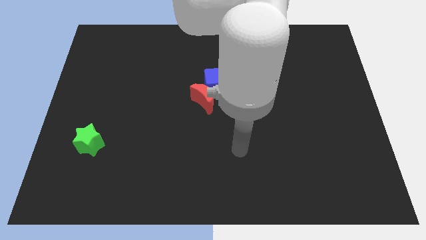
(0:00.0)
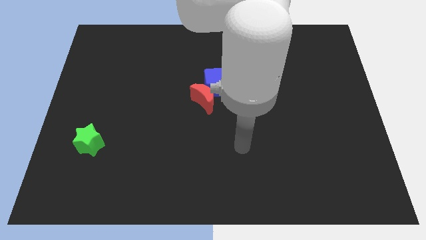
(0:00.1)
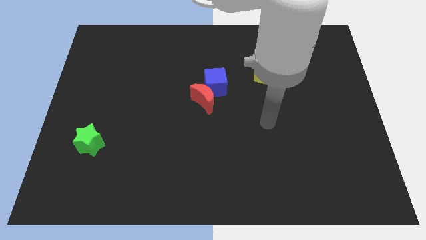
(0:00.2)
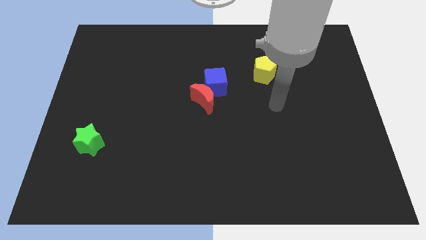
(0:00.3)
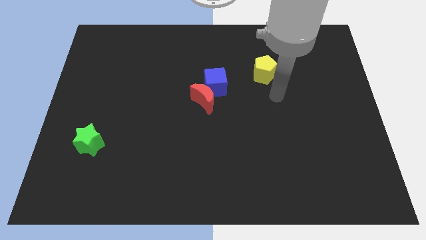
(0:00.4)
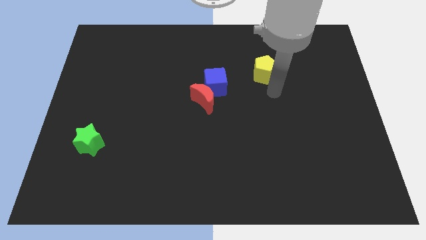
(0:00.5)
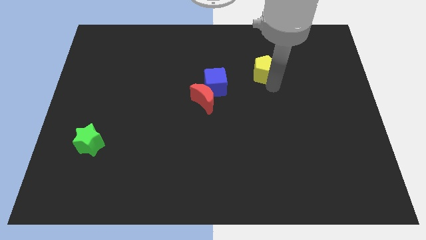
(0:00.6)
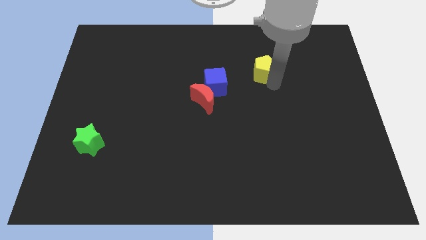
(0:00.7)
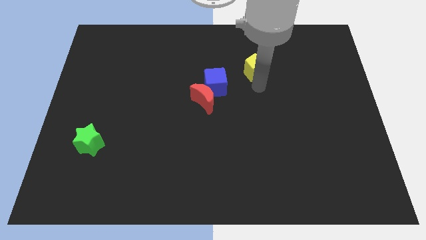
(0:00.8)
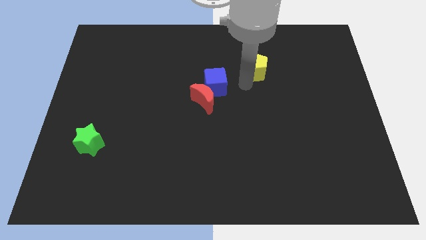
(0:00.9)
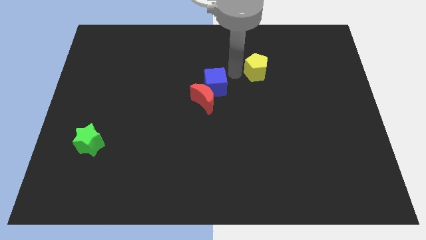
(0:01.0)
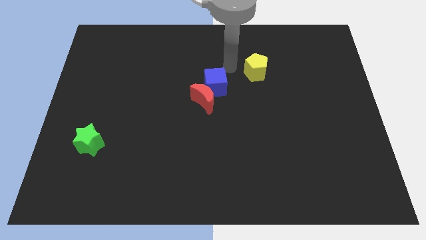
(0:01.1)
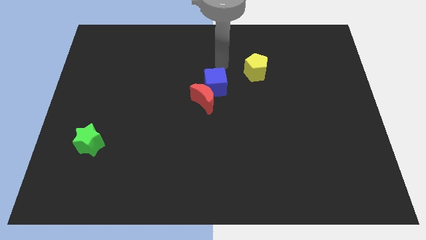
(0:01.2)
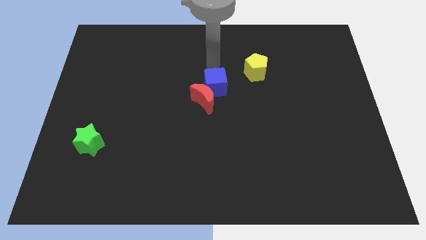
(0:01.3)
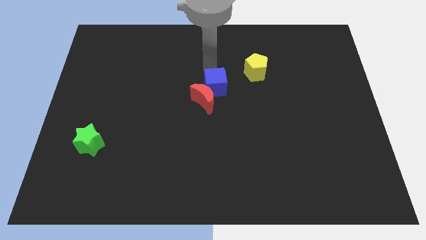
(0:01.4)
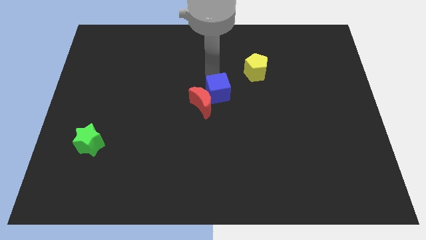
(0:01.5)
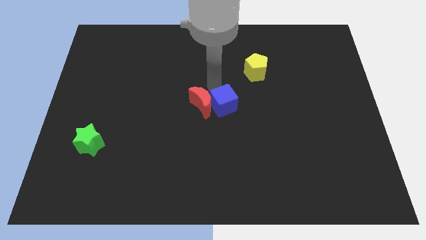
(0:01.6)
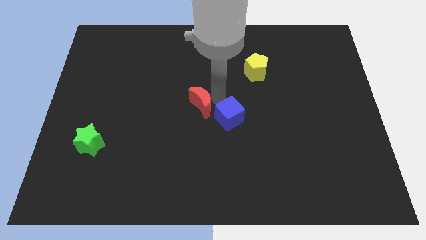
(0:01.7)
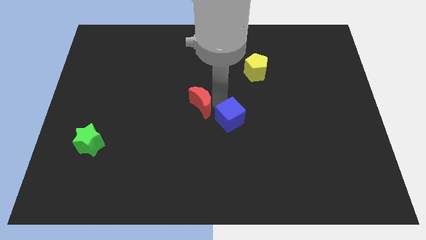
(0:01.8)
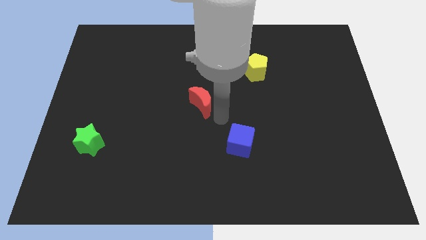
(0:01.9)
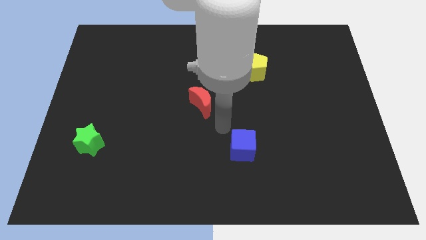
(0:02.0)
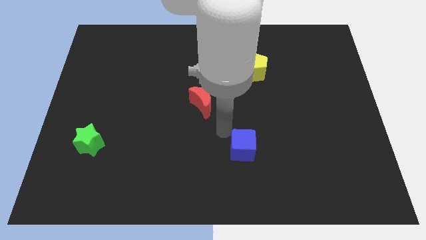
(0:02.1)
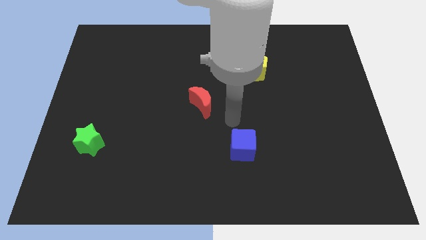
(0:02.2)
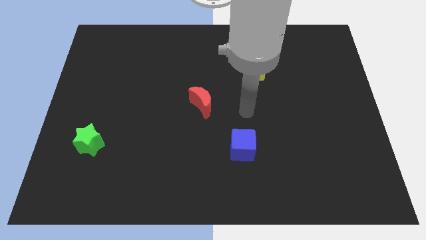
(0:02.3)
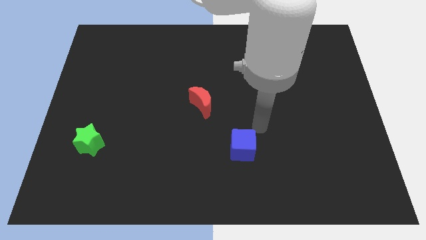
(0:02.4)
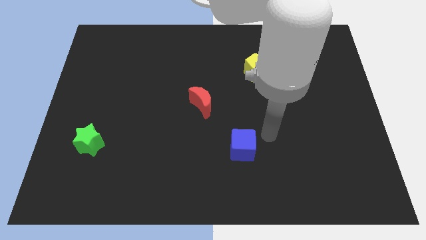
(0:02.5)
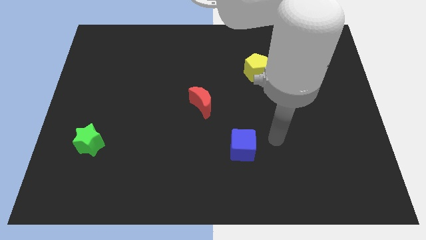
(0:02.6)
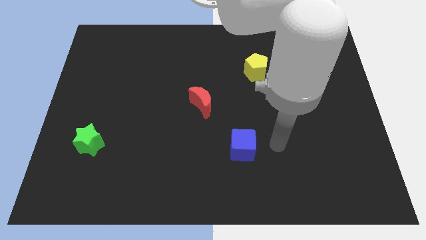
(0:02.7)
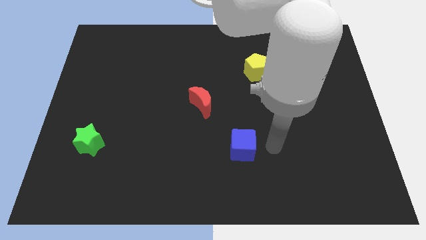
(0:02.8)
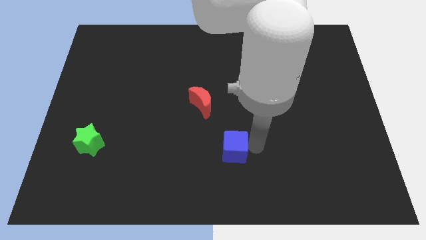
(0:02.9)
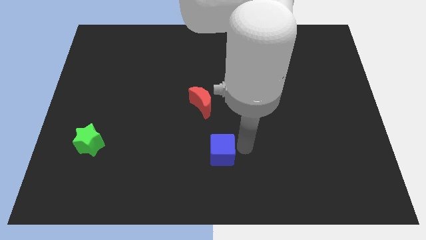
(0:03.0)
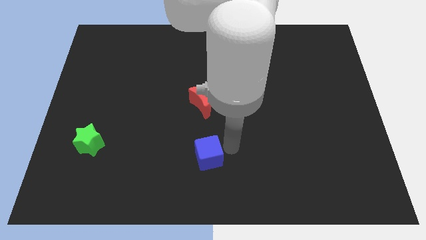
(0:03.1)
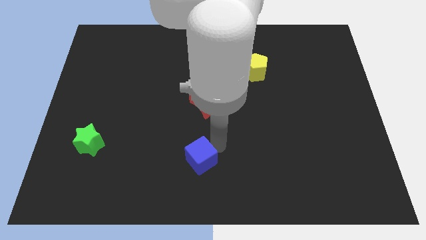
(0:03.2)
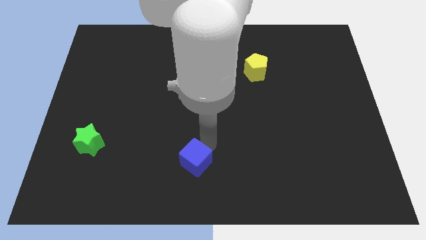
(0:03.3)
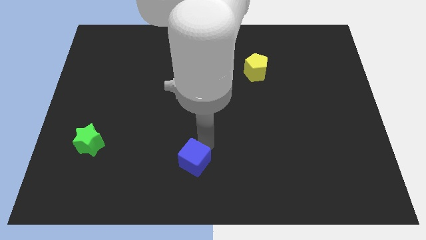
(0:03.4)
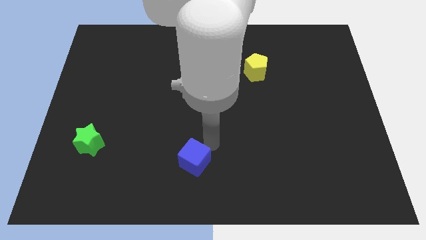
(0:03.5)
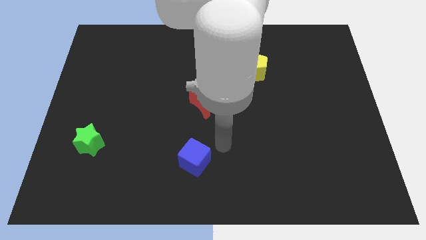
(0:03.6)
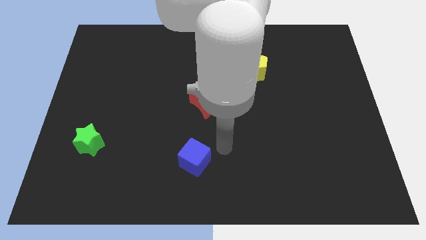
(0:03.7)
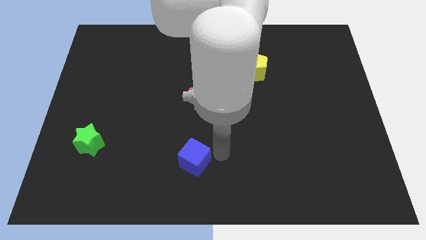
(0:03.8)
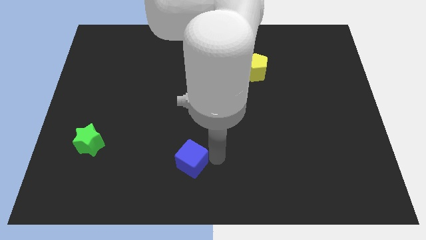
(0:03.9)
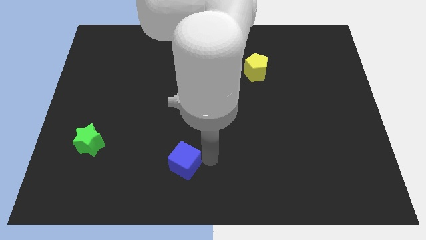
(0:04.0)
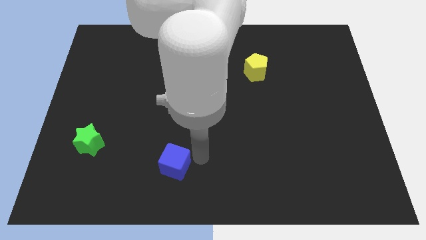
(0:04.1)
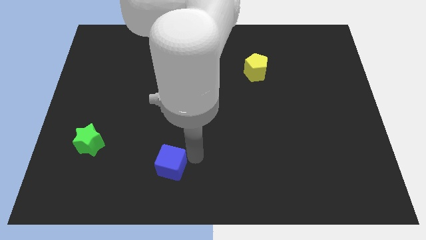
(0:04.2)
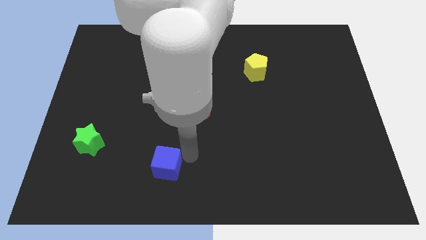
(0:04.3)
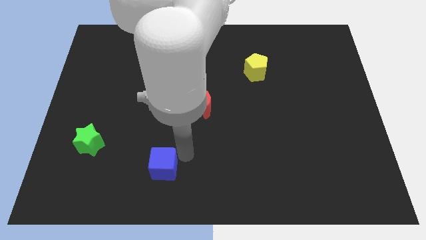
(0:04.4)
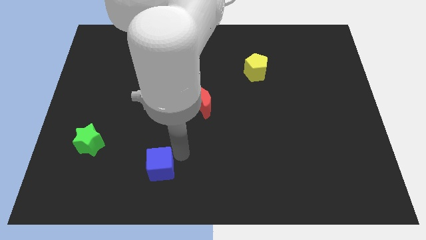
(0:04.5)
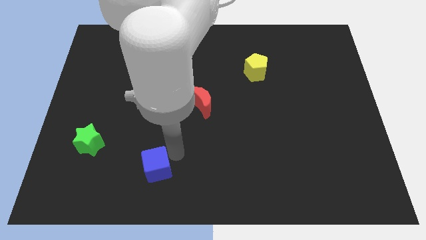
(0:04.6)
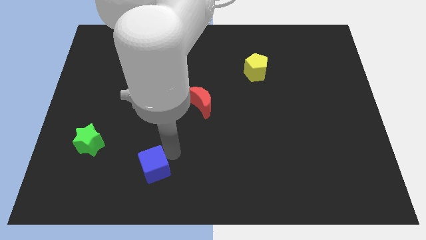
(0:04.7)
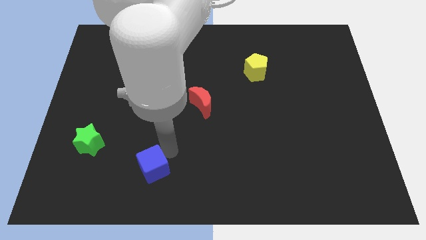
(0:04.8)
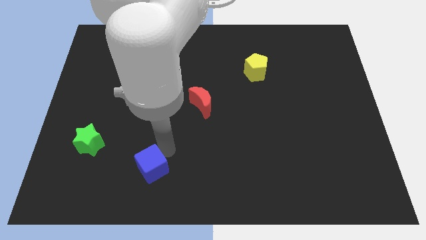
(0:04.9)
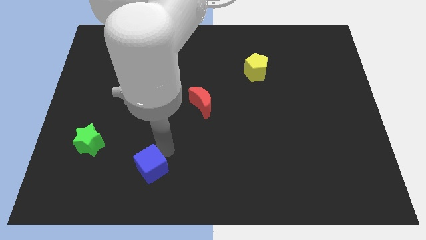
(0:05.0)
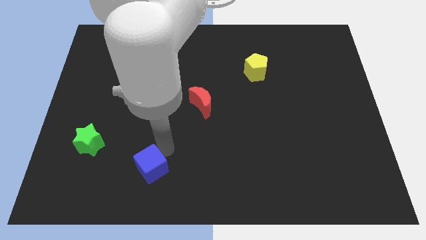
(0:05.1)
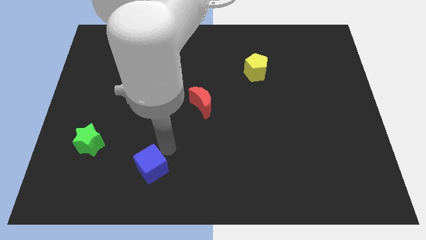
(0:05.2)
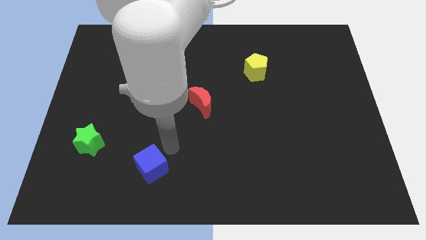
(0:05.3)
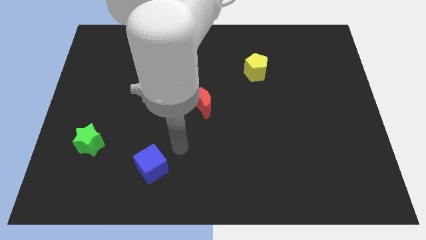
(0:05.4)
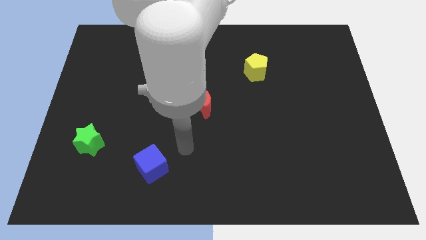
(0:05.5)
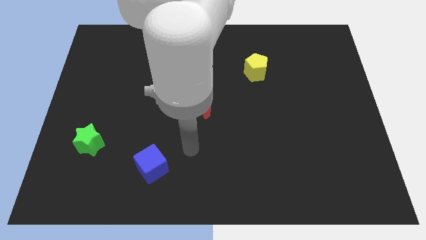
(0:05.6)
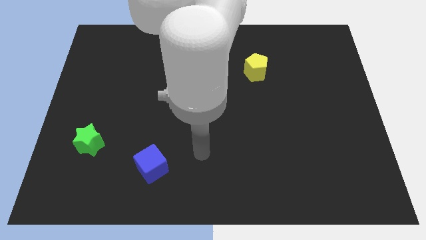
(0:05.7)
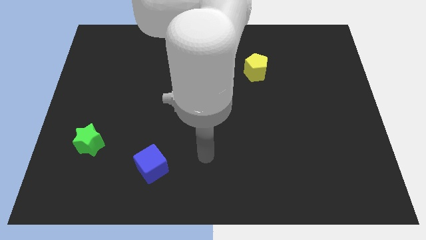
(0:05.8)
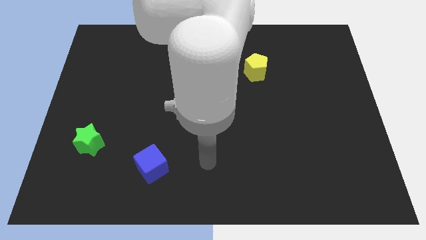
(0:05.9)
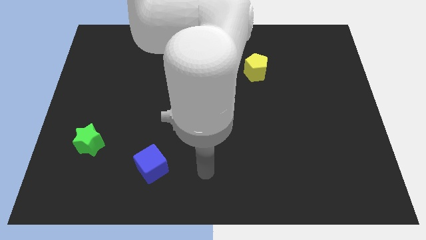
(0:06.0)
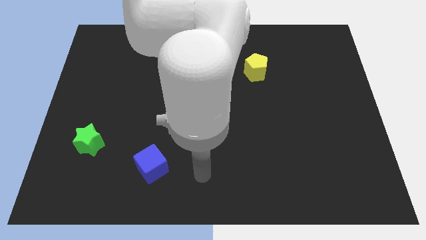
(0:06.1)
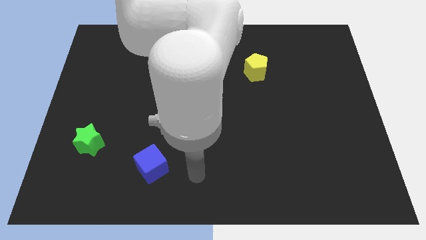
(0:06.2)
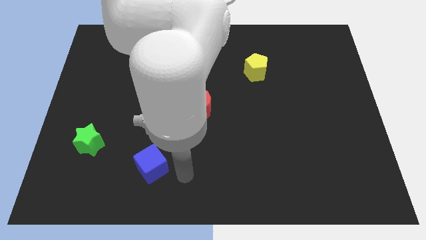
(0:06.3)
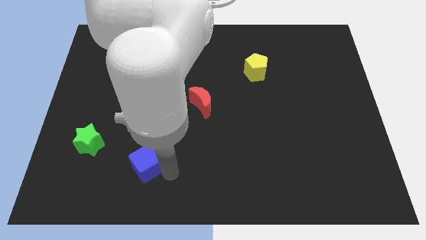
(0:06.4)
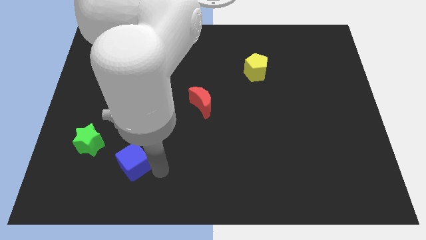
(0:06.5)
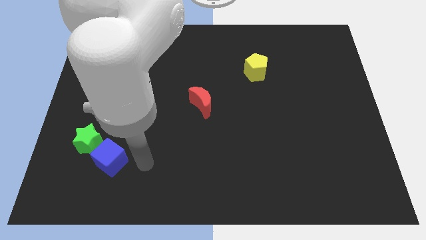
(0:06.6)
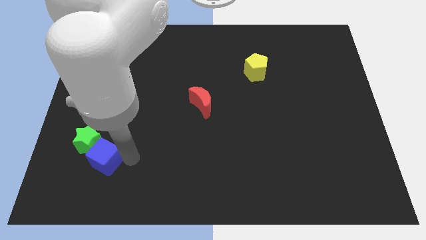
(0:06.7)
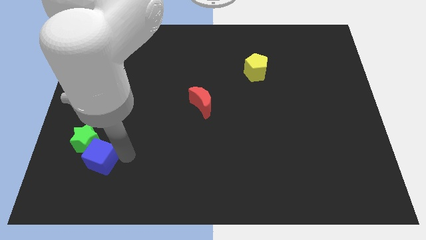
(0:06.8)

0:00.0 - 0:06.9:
push the blue block to the star

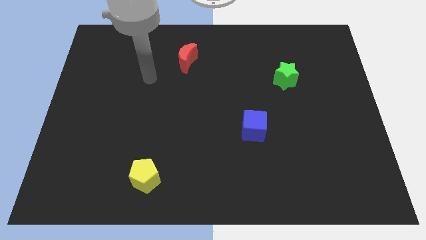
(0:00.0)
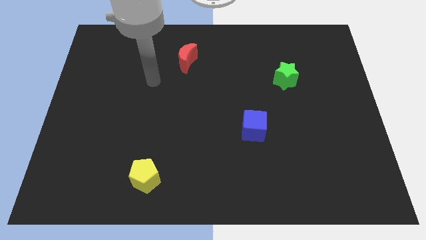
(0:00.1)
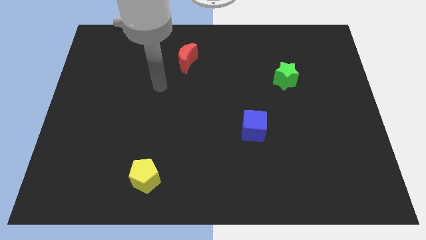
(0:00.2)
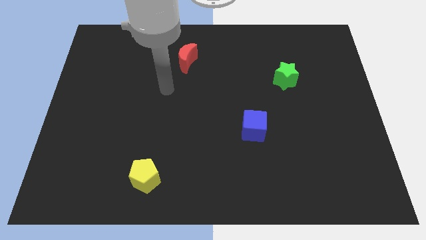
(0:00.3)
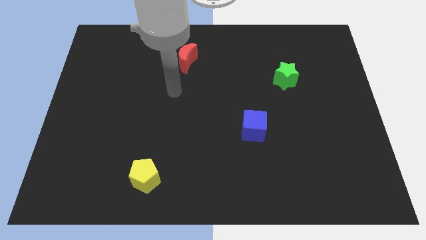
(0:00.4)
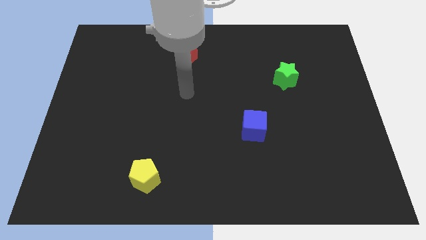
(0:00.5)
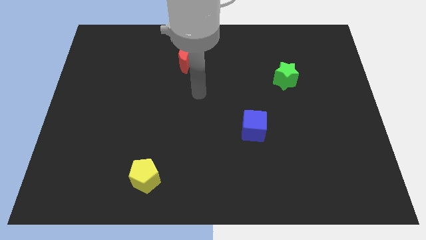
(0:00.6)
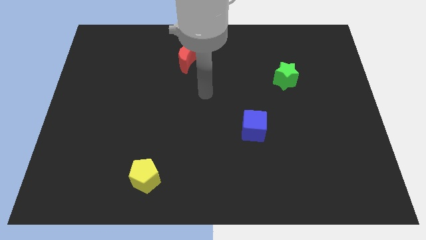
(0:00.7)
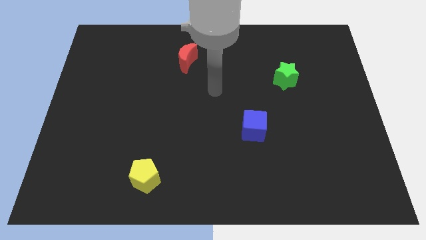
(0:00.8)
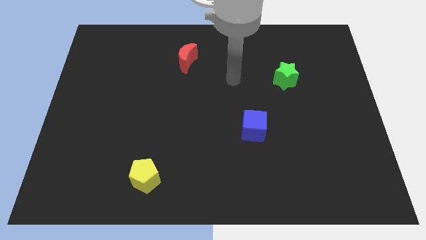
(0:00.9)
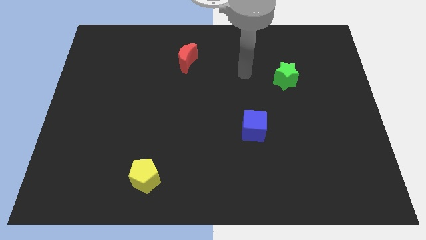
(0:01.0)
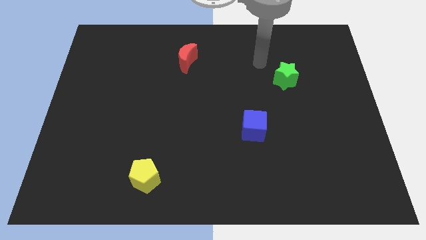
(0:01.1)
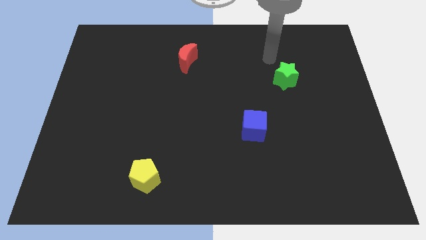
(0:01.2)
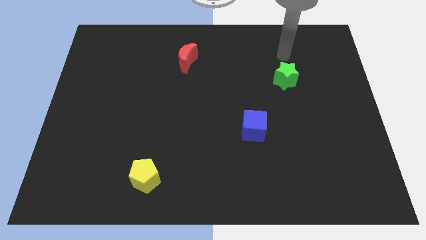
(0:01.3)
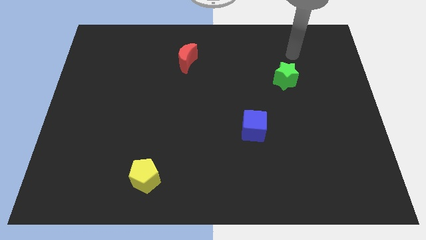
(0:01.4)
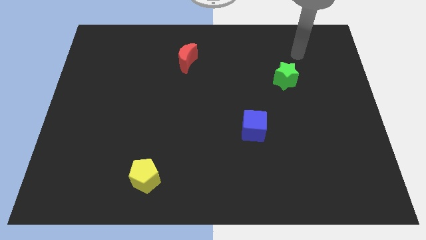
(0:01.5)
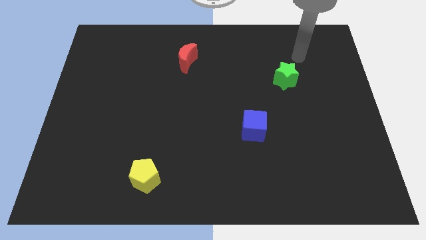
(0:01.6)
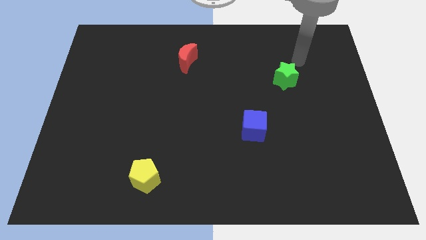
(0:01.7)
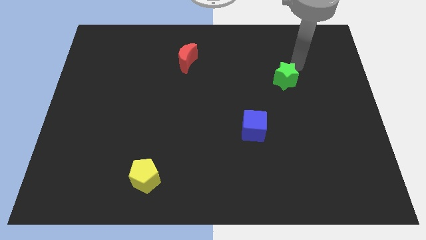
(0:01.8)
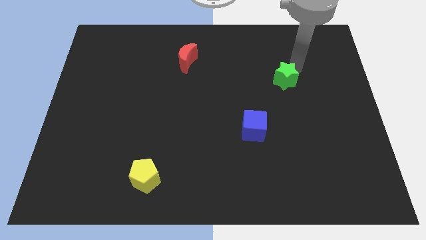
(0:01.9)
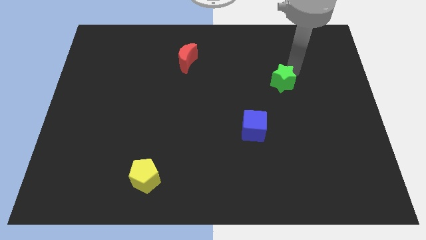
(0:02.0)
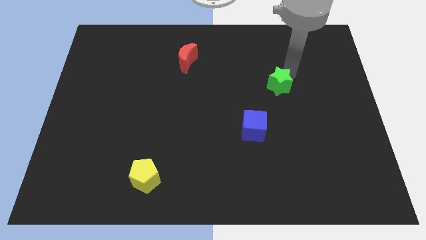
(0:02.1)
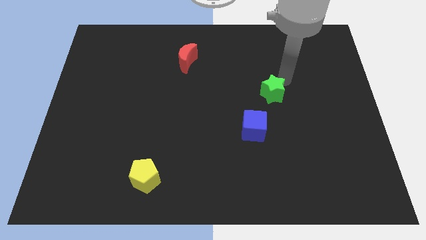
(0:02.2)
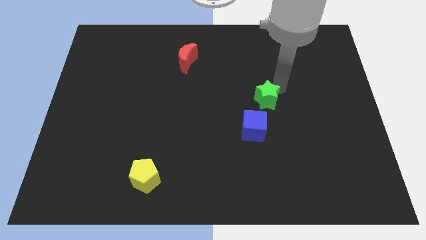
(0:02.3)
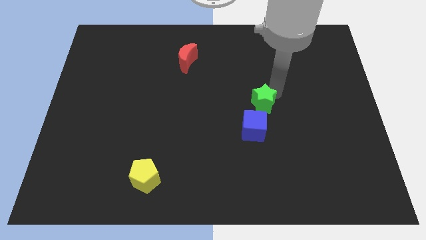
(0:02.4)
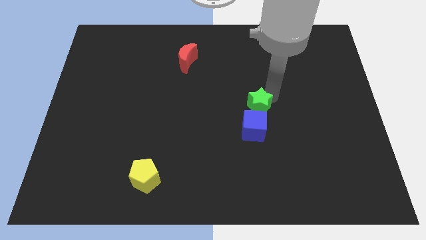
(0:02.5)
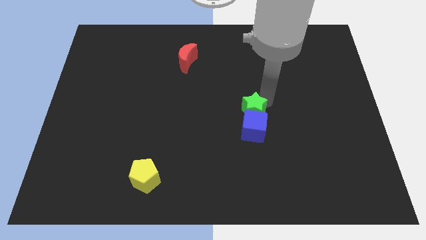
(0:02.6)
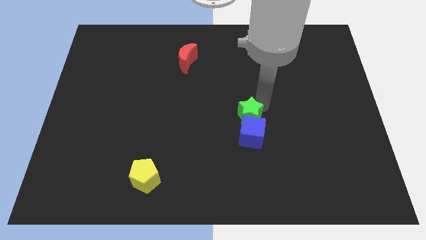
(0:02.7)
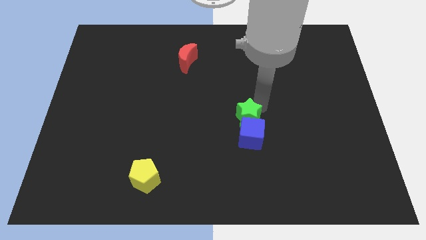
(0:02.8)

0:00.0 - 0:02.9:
move the green block to the blue block
